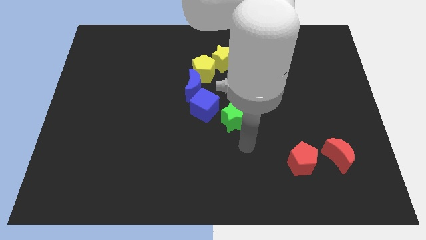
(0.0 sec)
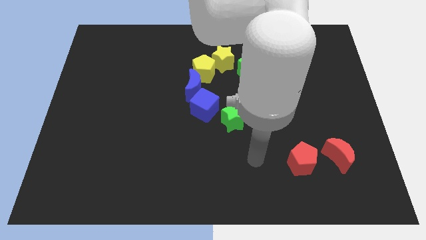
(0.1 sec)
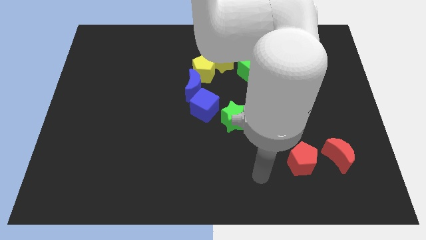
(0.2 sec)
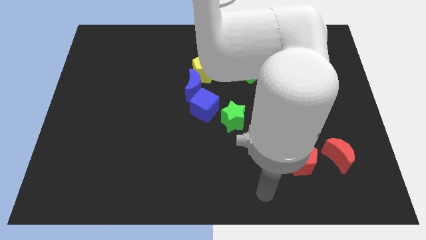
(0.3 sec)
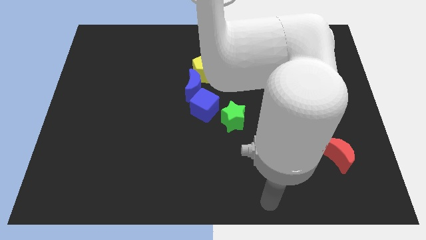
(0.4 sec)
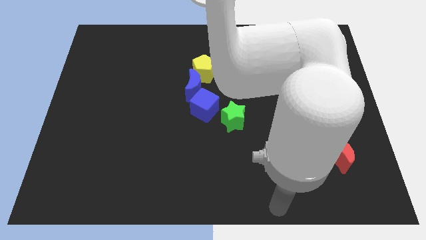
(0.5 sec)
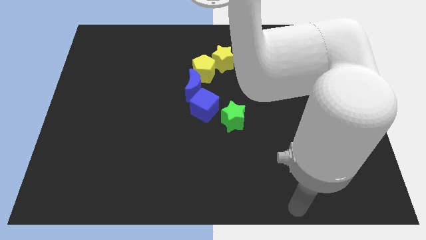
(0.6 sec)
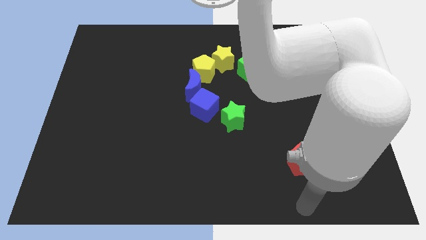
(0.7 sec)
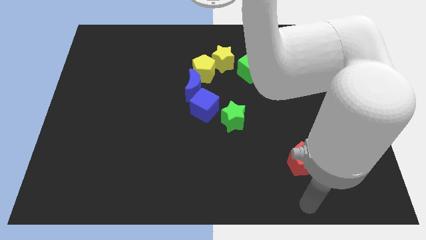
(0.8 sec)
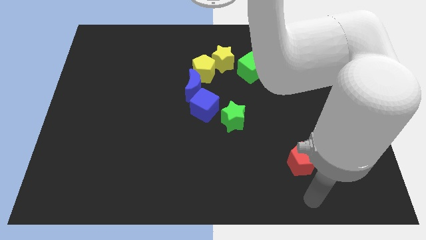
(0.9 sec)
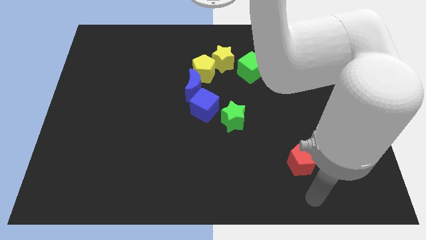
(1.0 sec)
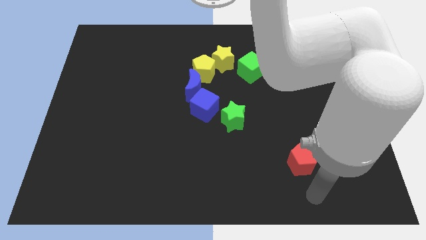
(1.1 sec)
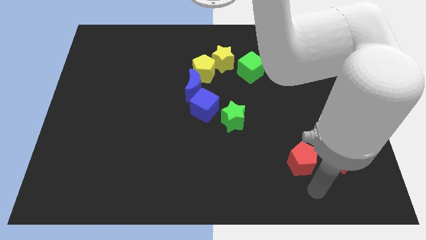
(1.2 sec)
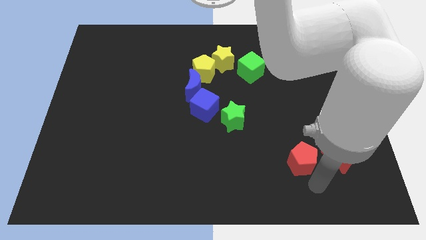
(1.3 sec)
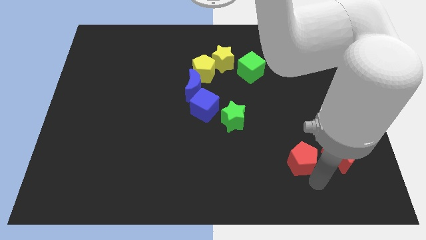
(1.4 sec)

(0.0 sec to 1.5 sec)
move your arm to the bottom right of the red pentagon

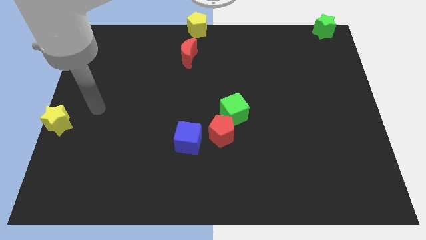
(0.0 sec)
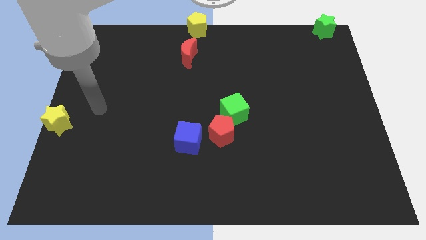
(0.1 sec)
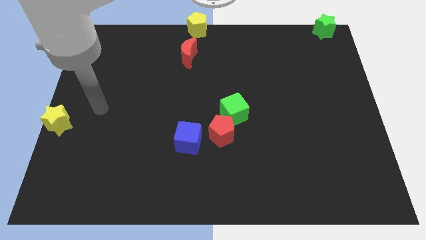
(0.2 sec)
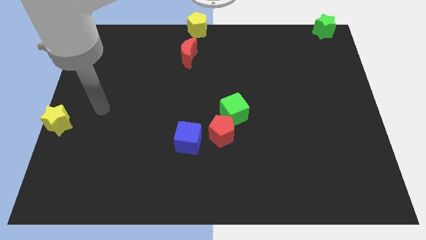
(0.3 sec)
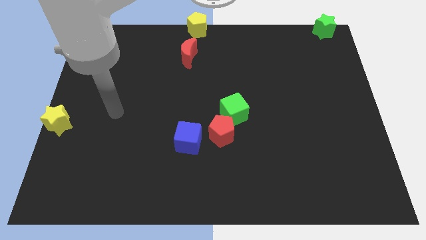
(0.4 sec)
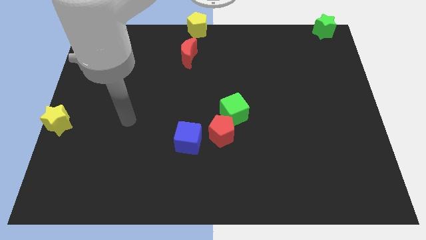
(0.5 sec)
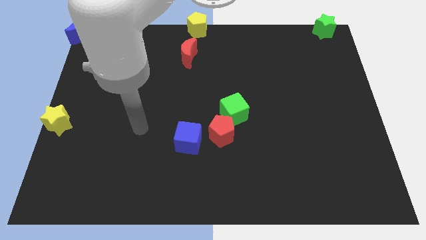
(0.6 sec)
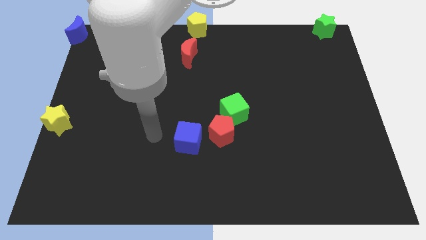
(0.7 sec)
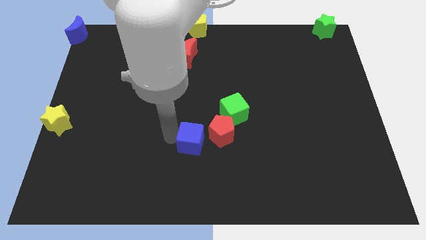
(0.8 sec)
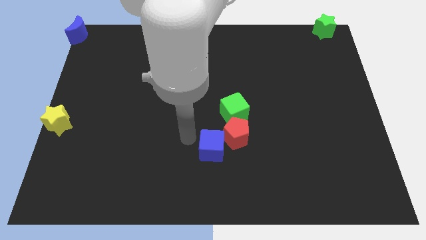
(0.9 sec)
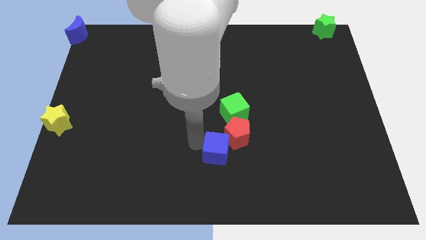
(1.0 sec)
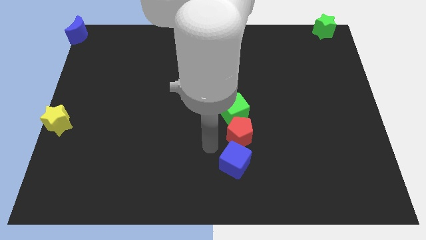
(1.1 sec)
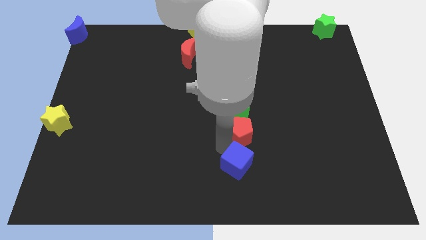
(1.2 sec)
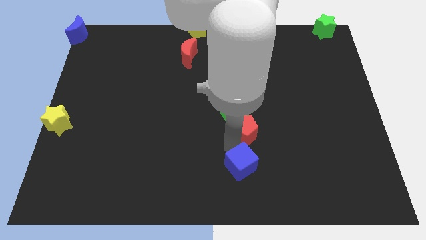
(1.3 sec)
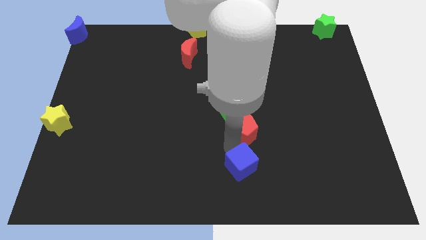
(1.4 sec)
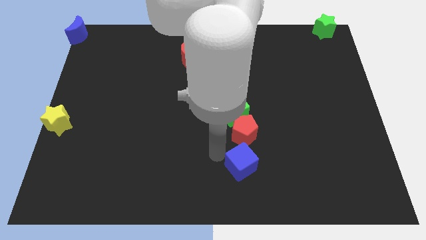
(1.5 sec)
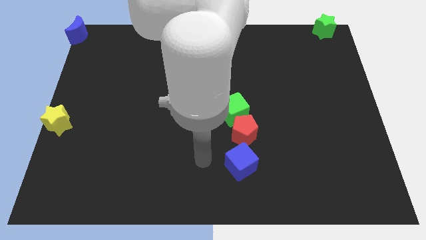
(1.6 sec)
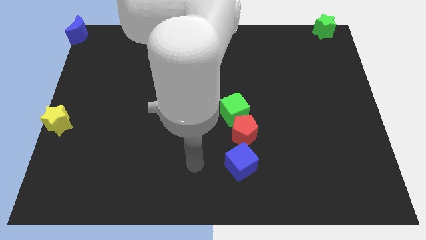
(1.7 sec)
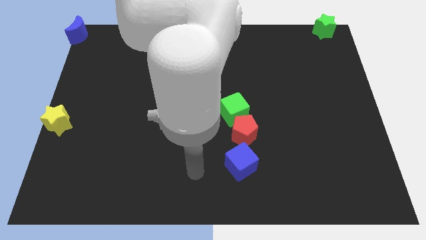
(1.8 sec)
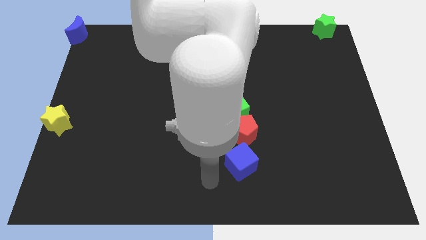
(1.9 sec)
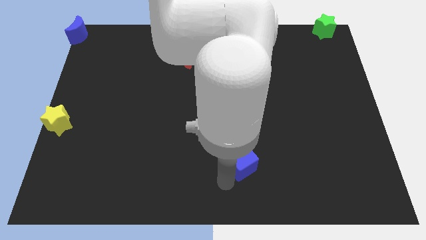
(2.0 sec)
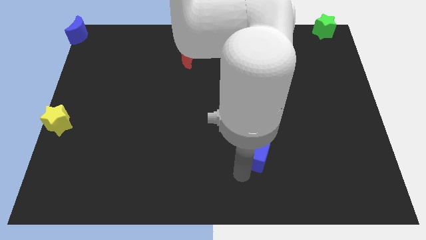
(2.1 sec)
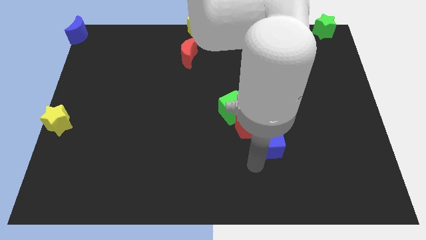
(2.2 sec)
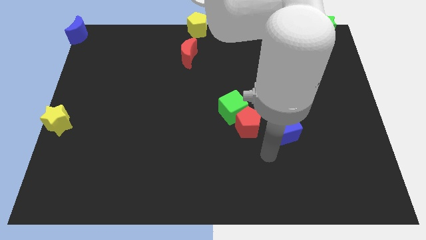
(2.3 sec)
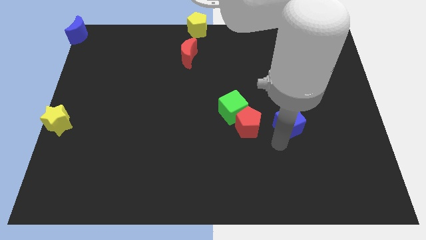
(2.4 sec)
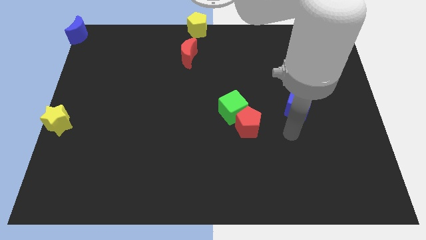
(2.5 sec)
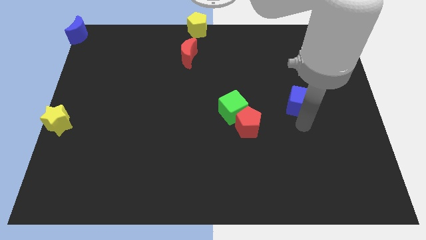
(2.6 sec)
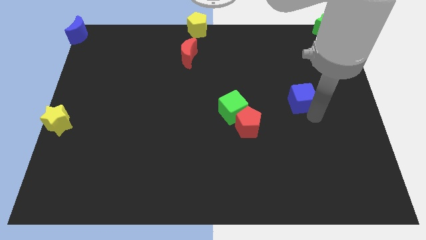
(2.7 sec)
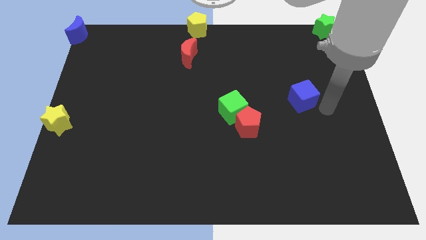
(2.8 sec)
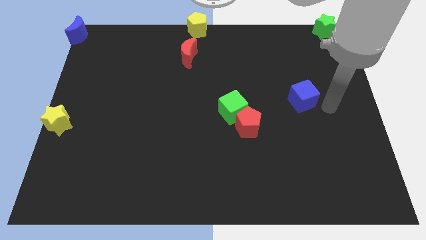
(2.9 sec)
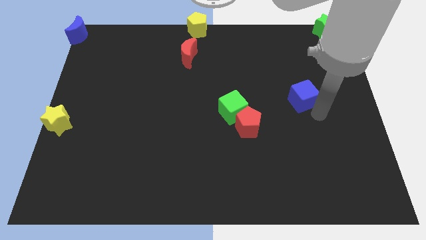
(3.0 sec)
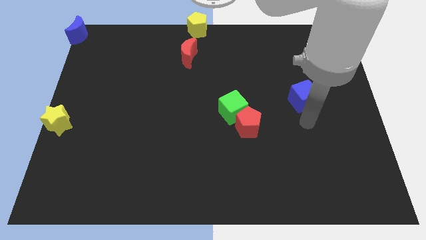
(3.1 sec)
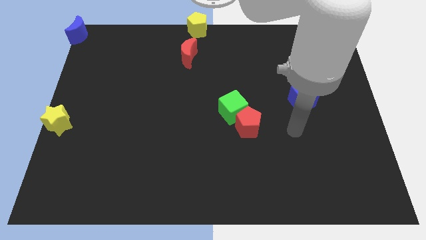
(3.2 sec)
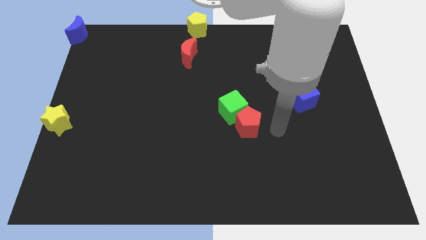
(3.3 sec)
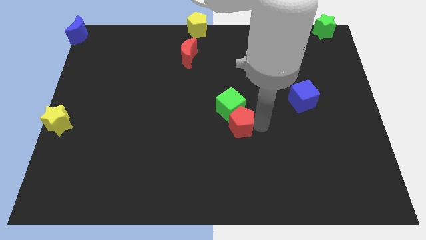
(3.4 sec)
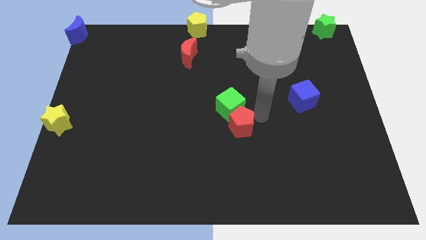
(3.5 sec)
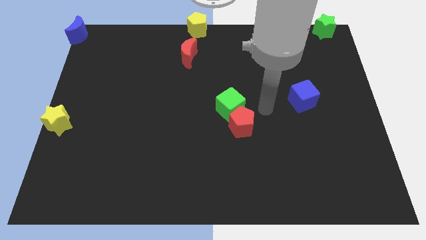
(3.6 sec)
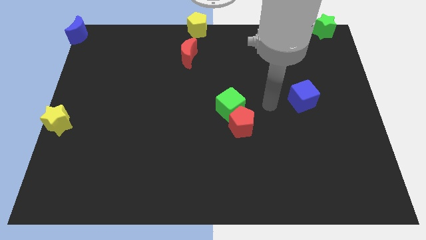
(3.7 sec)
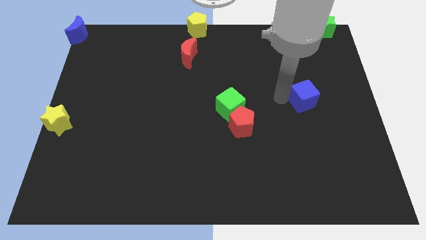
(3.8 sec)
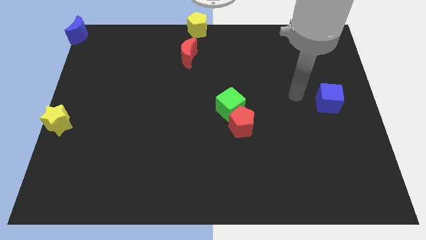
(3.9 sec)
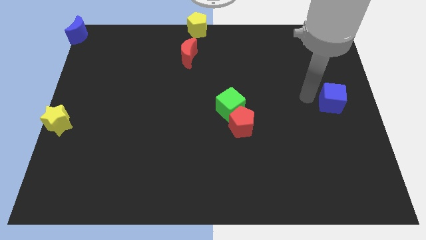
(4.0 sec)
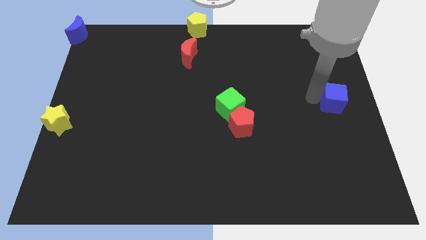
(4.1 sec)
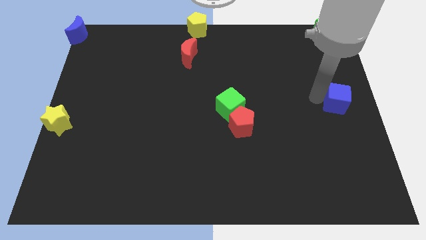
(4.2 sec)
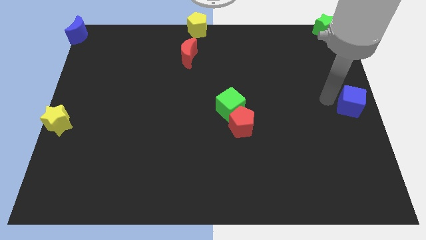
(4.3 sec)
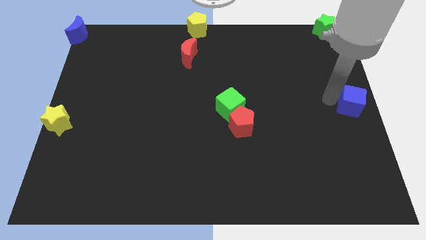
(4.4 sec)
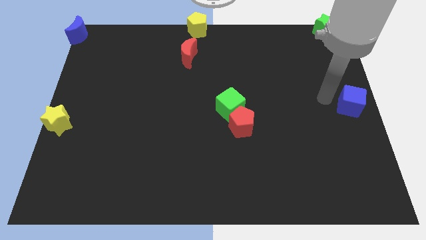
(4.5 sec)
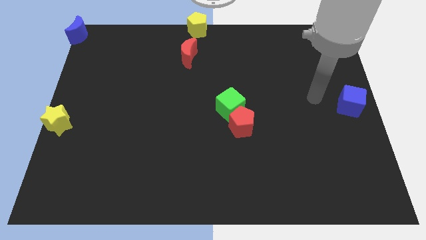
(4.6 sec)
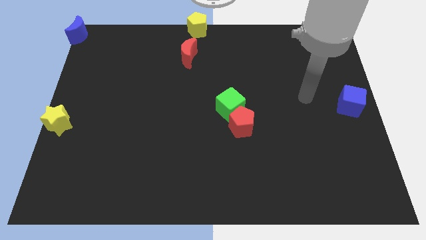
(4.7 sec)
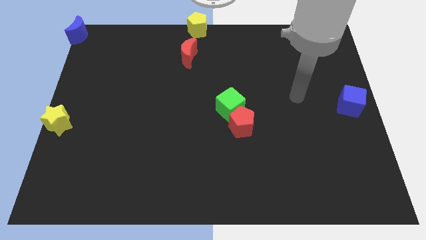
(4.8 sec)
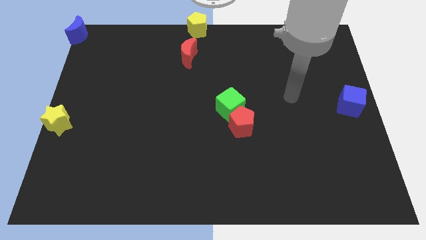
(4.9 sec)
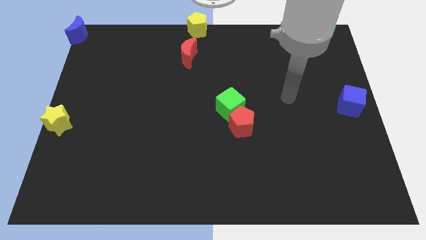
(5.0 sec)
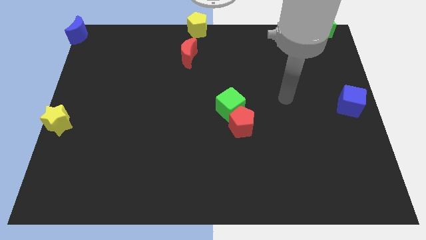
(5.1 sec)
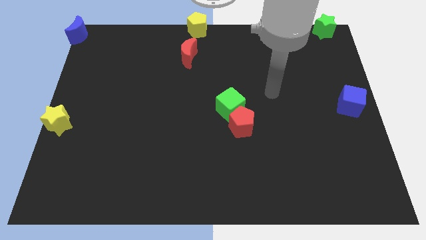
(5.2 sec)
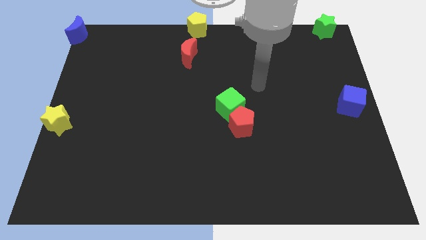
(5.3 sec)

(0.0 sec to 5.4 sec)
push the blue cube to the center right

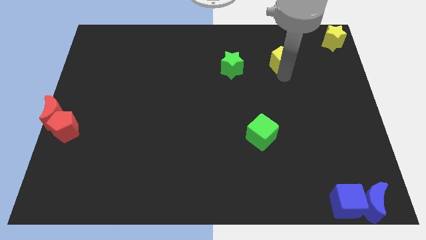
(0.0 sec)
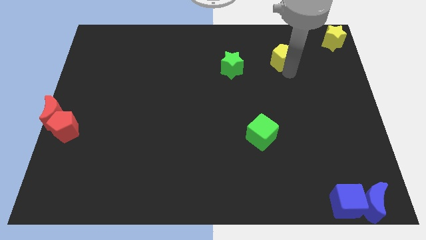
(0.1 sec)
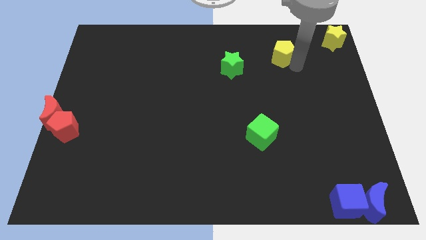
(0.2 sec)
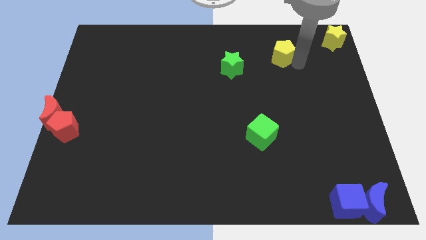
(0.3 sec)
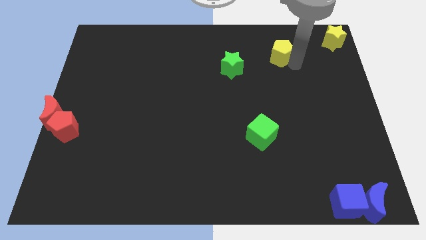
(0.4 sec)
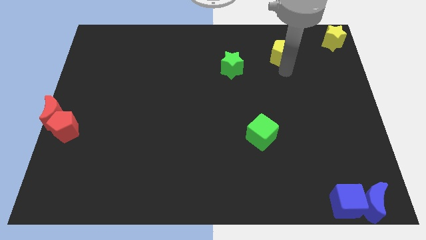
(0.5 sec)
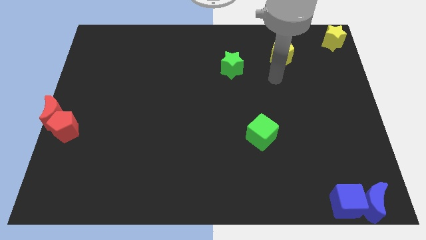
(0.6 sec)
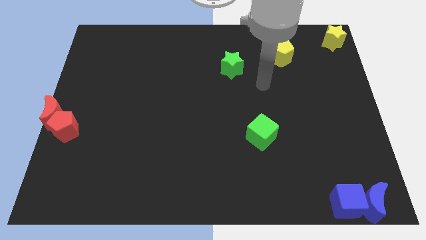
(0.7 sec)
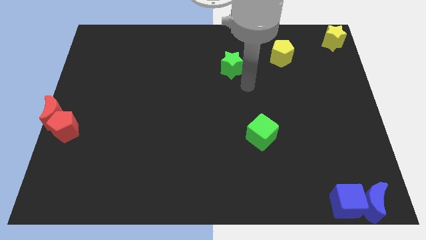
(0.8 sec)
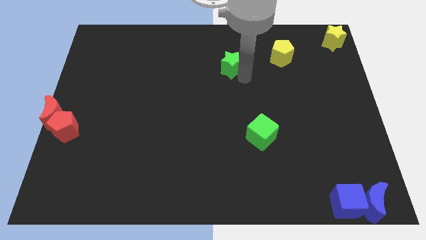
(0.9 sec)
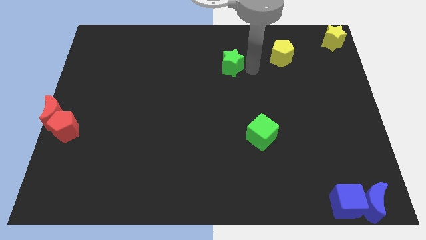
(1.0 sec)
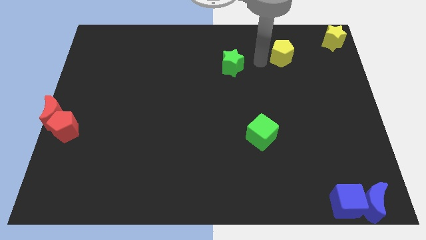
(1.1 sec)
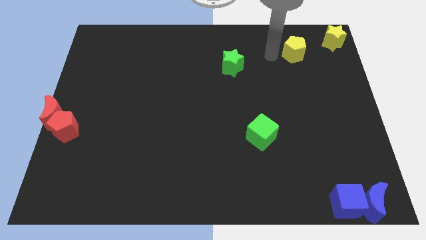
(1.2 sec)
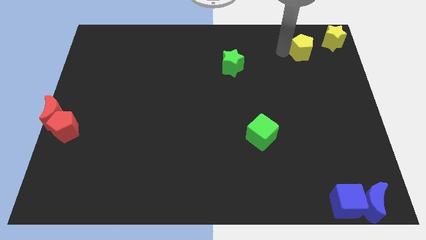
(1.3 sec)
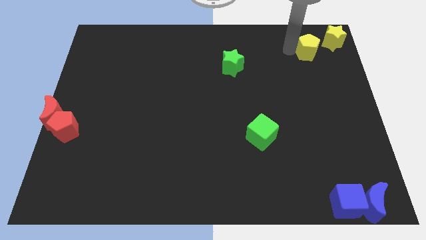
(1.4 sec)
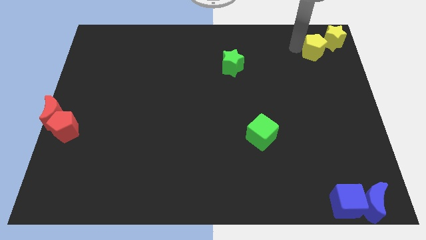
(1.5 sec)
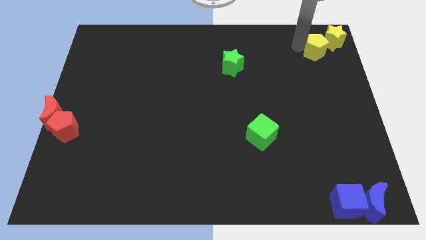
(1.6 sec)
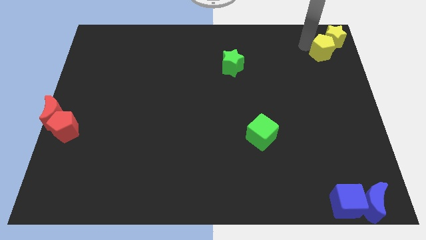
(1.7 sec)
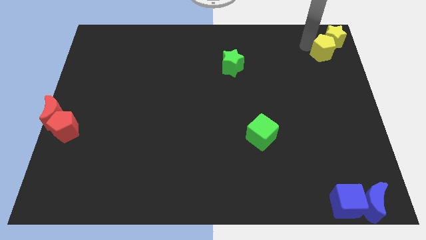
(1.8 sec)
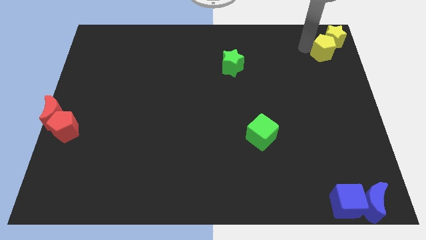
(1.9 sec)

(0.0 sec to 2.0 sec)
group up the yellow blocks at the top right corner
